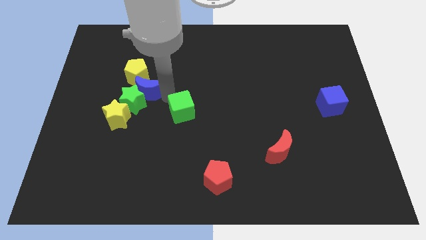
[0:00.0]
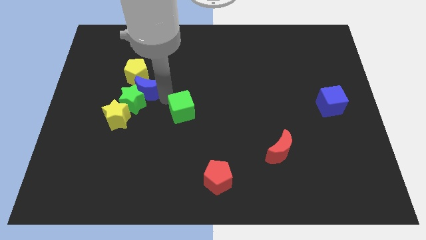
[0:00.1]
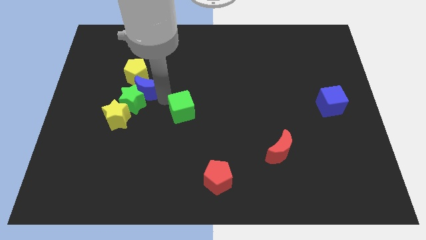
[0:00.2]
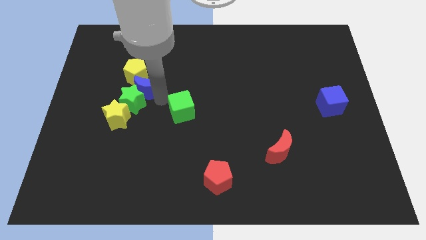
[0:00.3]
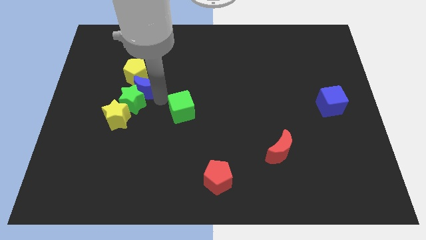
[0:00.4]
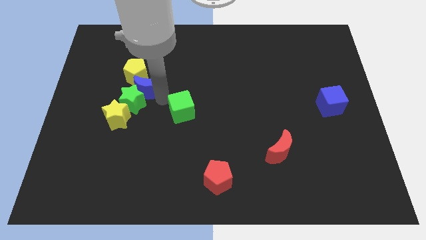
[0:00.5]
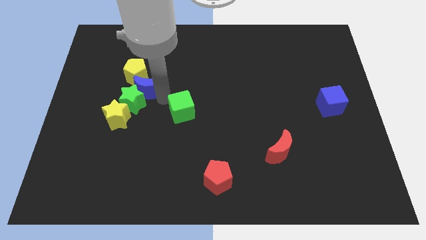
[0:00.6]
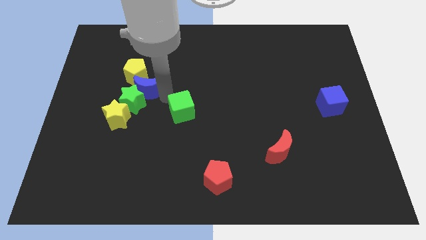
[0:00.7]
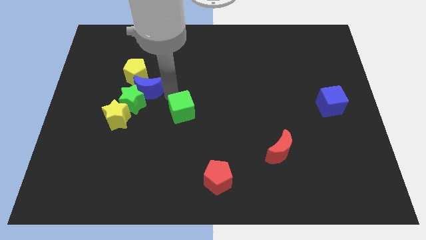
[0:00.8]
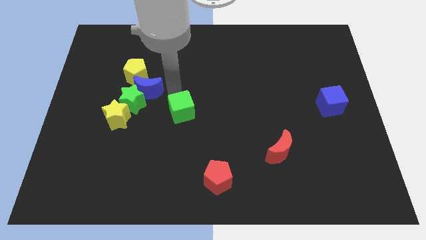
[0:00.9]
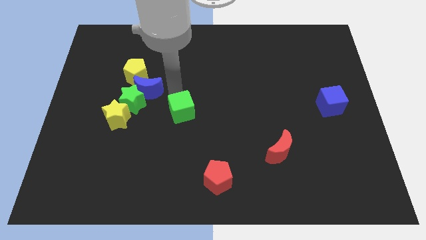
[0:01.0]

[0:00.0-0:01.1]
tap the bottom of the blue moon

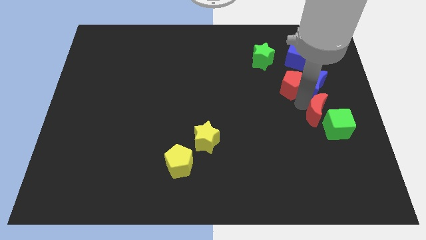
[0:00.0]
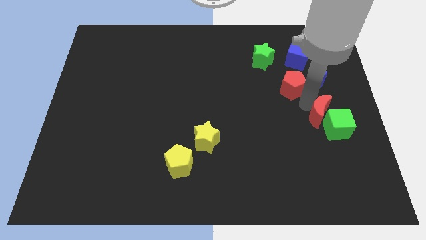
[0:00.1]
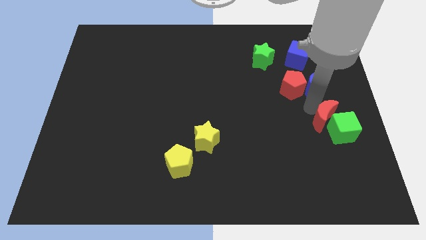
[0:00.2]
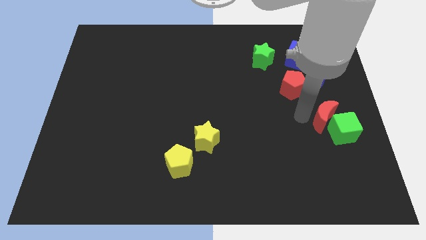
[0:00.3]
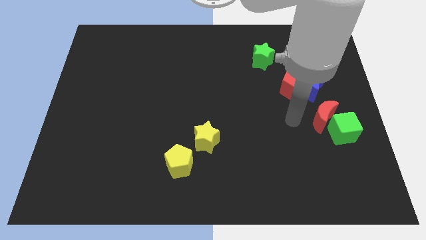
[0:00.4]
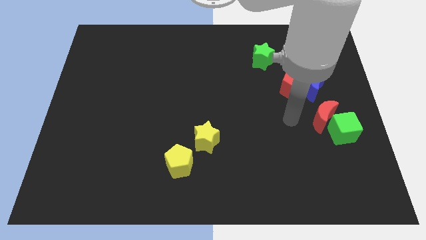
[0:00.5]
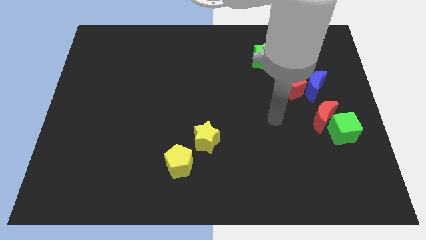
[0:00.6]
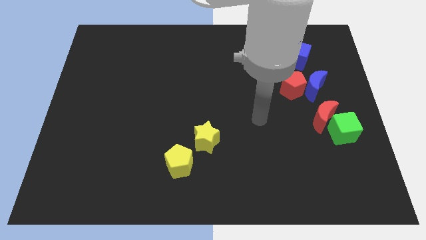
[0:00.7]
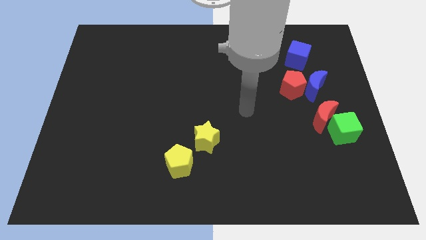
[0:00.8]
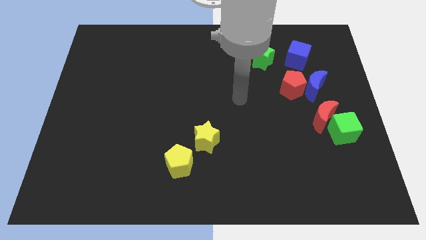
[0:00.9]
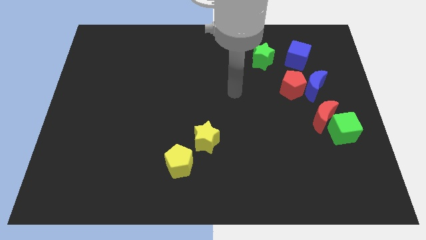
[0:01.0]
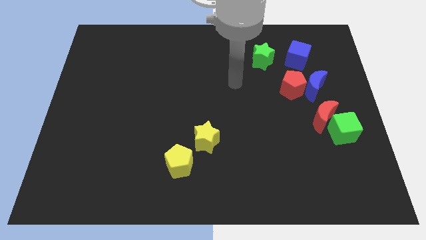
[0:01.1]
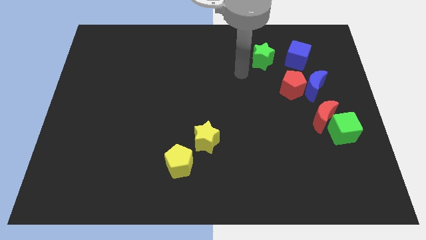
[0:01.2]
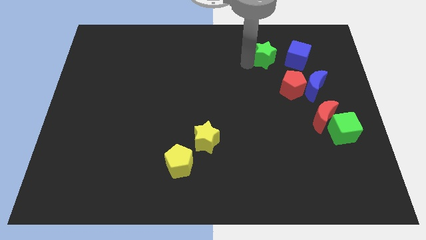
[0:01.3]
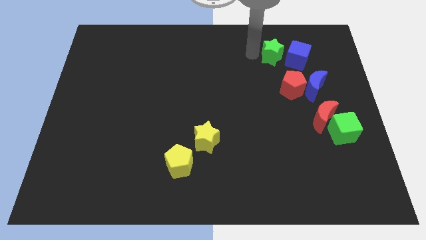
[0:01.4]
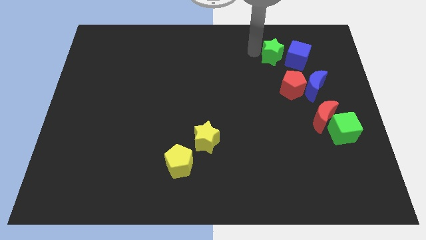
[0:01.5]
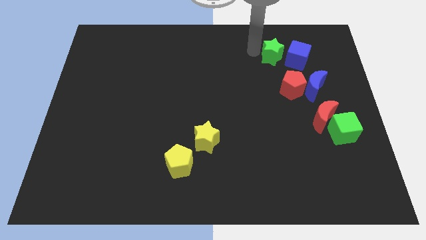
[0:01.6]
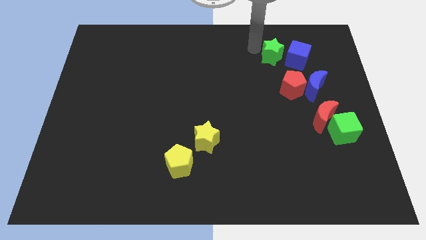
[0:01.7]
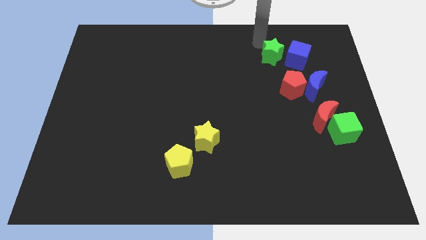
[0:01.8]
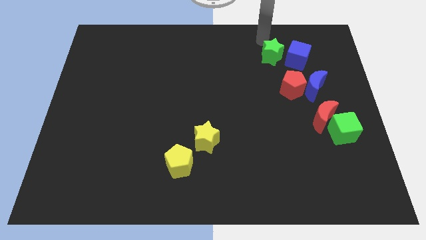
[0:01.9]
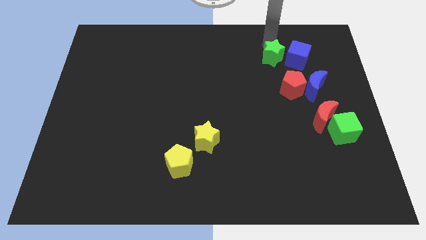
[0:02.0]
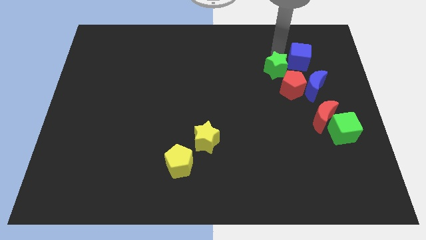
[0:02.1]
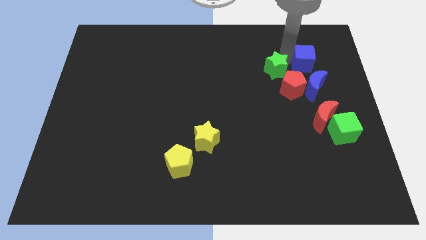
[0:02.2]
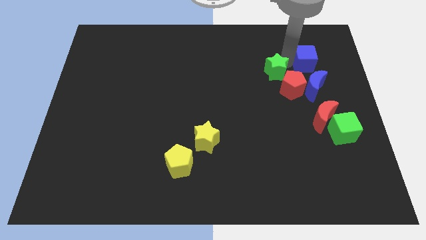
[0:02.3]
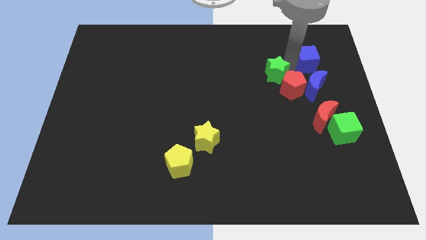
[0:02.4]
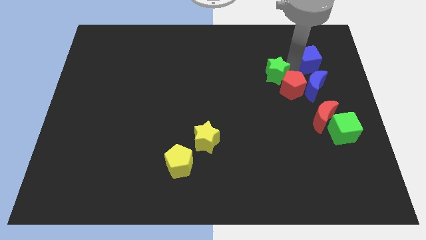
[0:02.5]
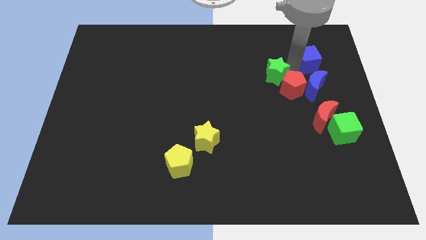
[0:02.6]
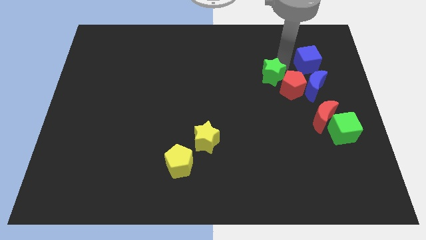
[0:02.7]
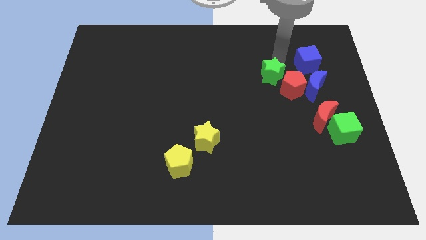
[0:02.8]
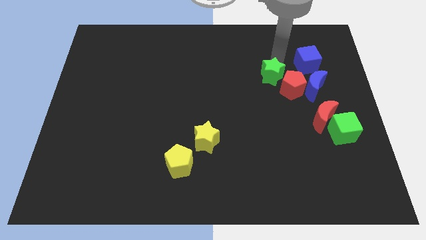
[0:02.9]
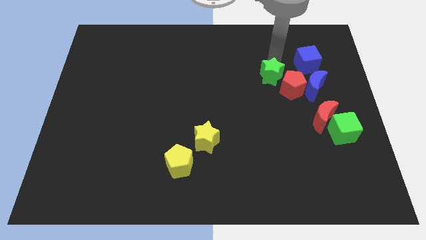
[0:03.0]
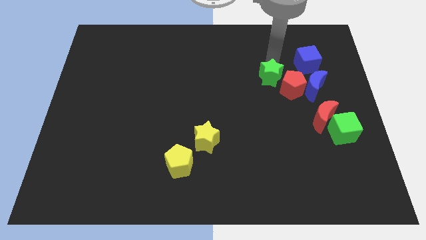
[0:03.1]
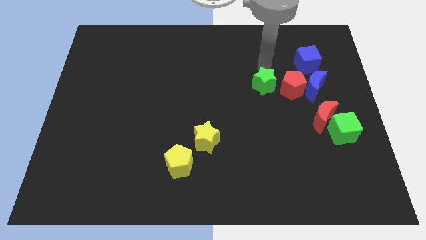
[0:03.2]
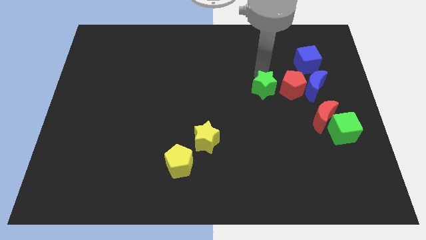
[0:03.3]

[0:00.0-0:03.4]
place the green star beside the red pentagon

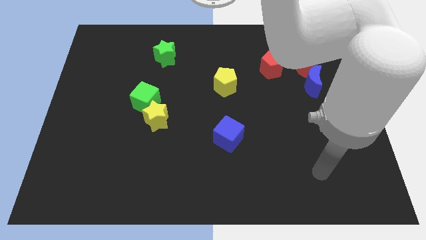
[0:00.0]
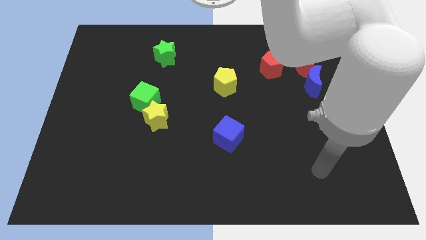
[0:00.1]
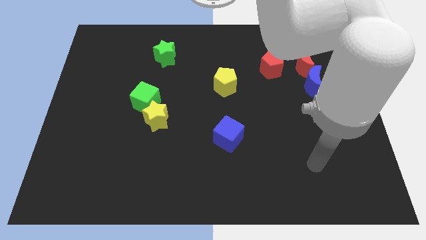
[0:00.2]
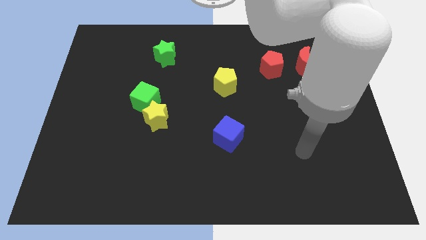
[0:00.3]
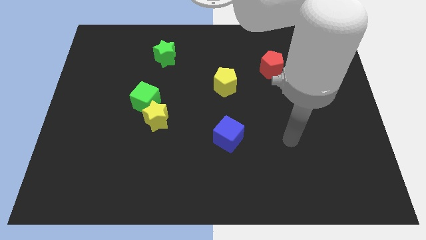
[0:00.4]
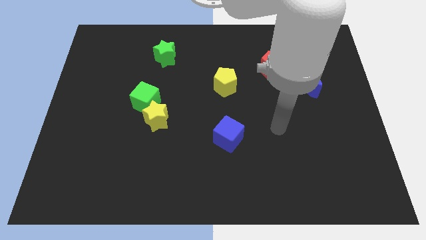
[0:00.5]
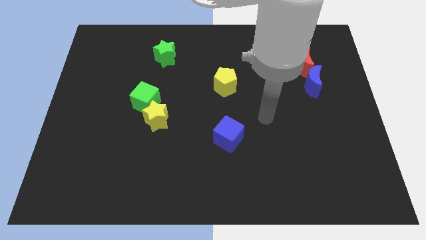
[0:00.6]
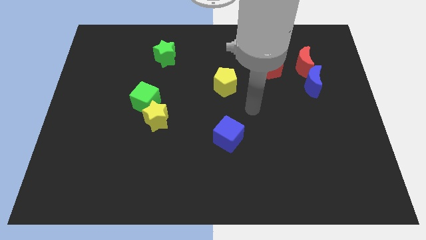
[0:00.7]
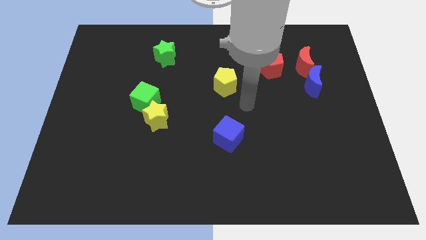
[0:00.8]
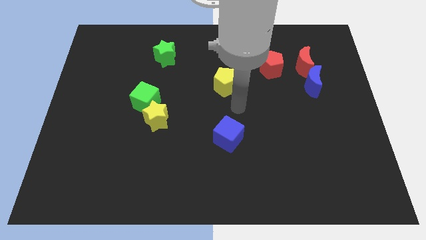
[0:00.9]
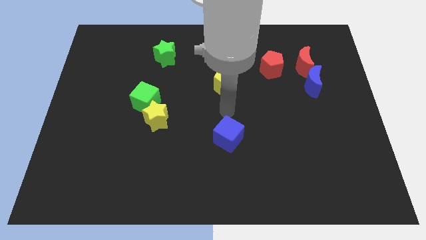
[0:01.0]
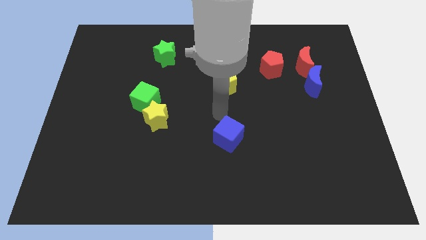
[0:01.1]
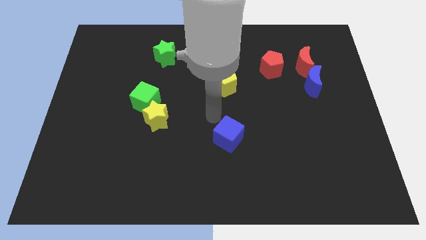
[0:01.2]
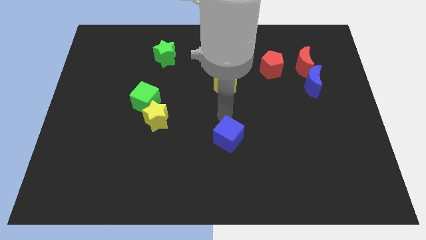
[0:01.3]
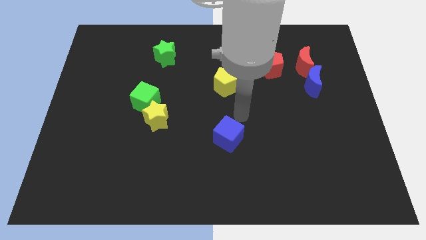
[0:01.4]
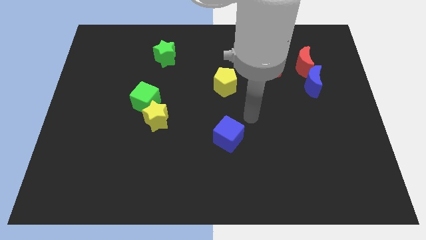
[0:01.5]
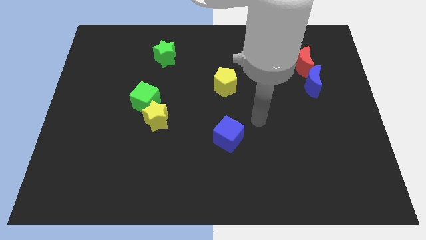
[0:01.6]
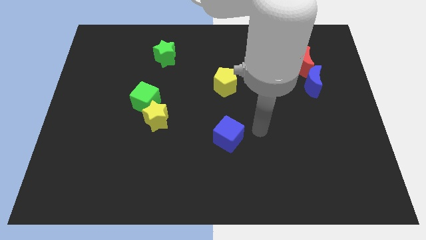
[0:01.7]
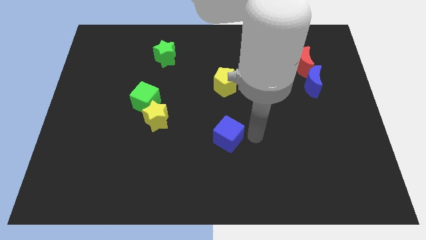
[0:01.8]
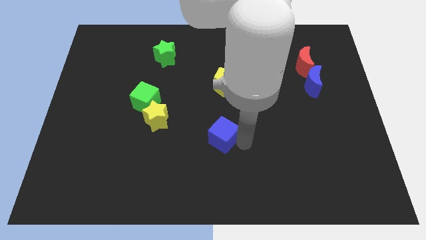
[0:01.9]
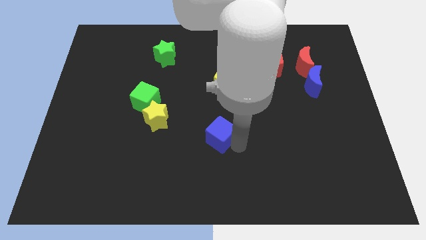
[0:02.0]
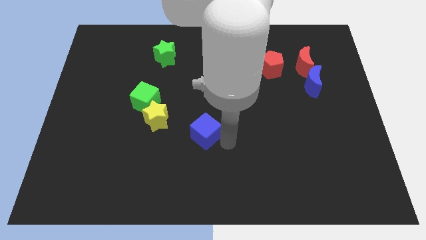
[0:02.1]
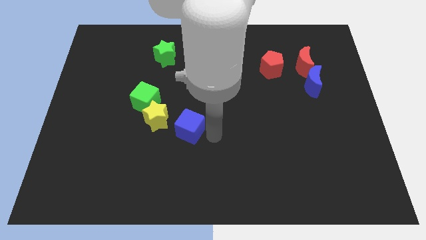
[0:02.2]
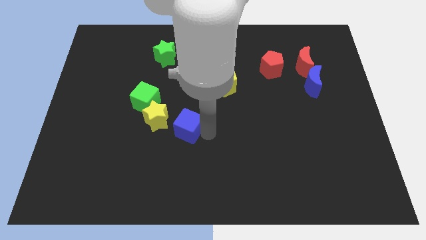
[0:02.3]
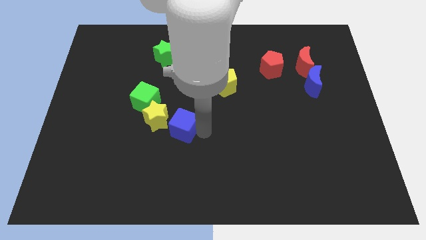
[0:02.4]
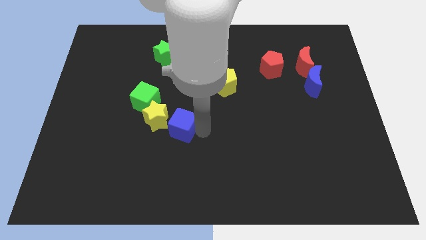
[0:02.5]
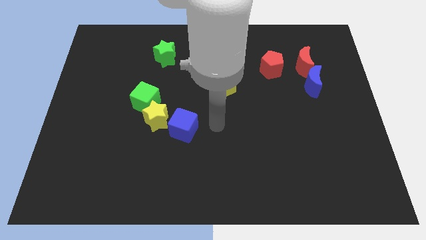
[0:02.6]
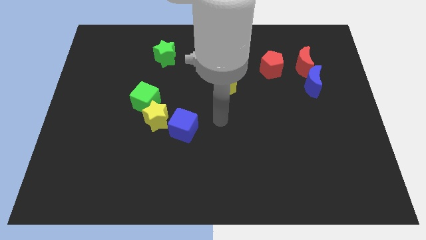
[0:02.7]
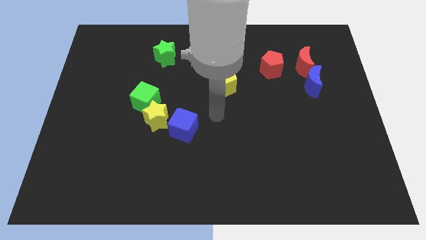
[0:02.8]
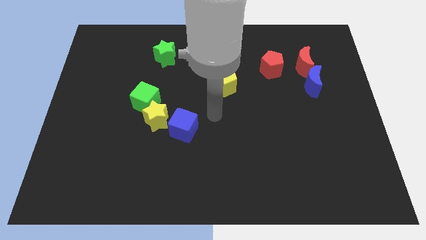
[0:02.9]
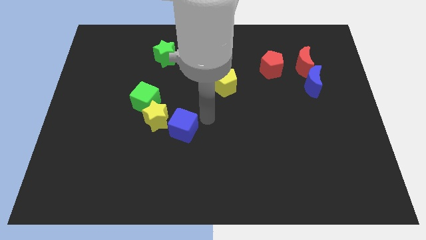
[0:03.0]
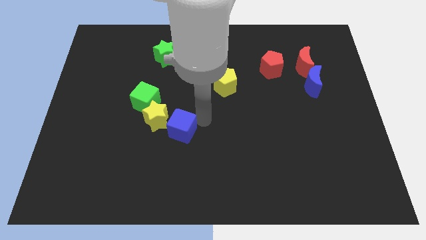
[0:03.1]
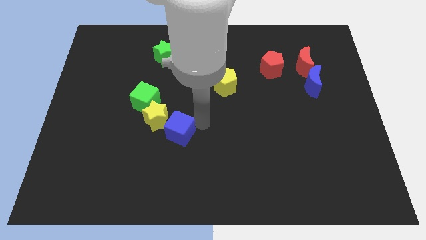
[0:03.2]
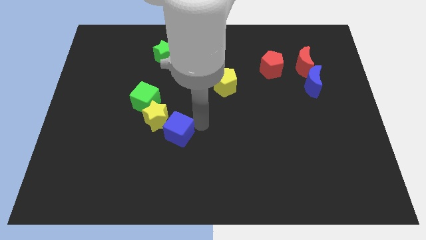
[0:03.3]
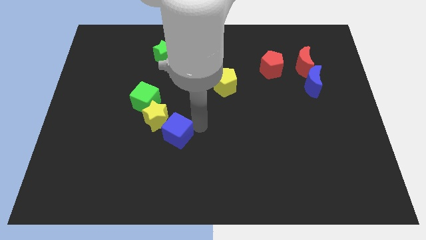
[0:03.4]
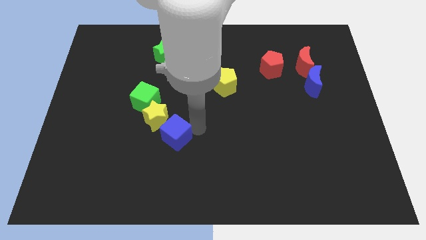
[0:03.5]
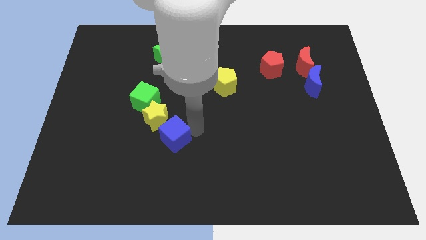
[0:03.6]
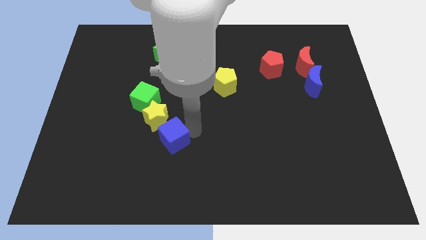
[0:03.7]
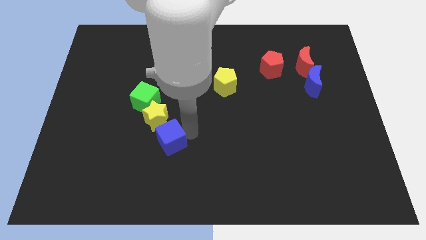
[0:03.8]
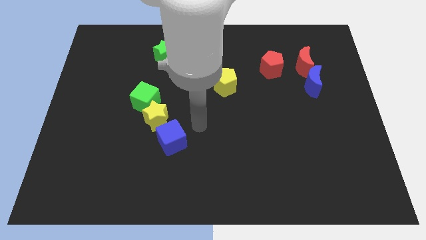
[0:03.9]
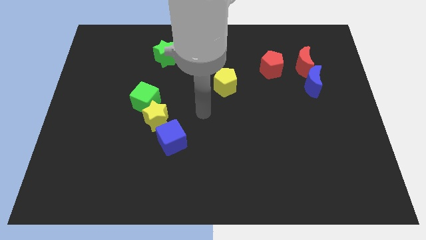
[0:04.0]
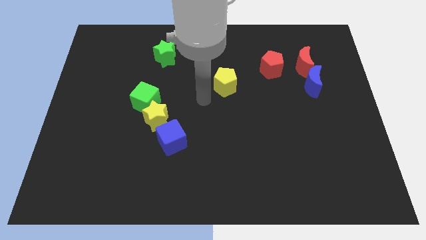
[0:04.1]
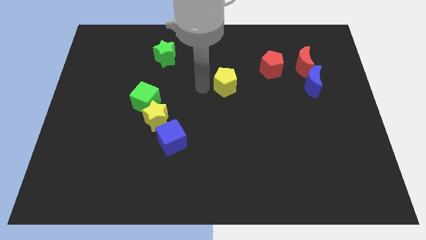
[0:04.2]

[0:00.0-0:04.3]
place the blue cube right to the yellow star

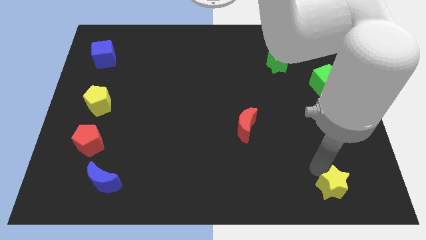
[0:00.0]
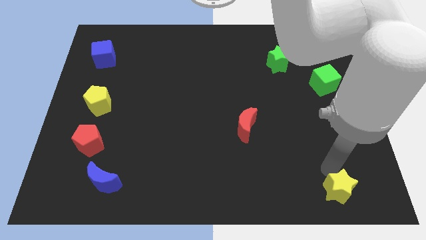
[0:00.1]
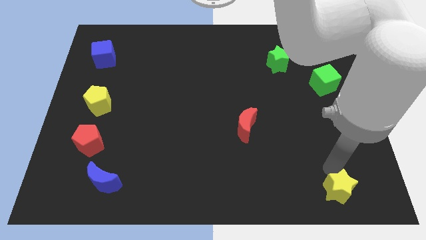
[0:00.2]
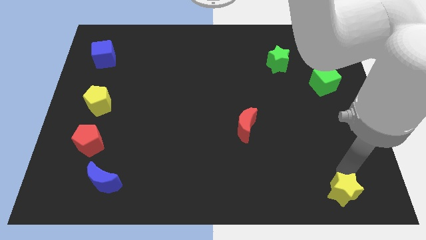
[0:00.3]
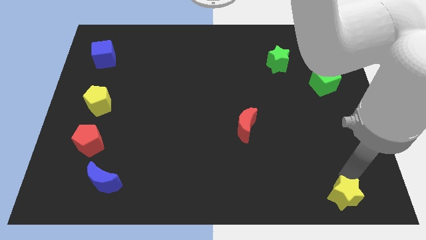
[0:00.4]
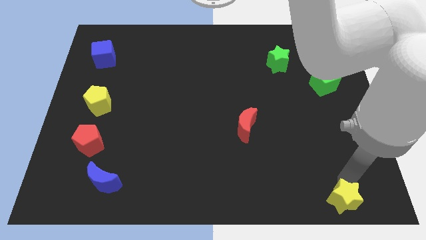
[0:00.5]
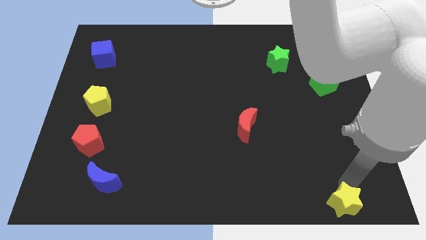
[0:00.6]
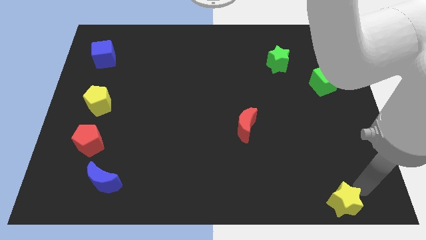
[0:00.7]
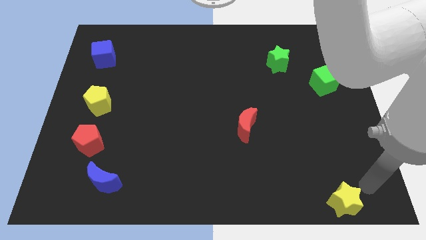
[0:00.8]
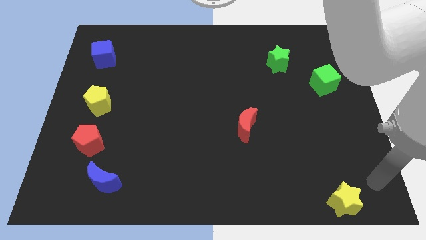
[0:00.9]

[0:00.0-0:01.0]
push yellow star to the bottom of the board
